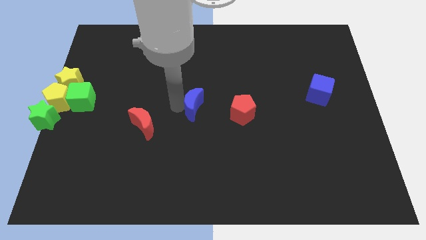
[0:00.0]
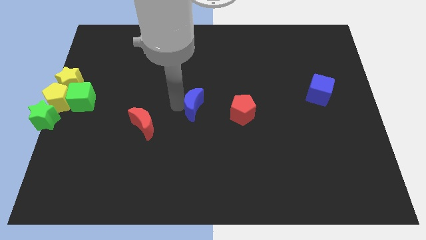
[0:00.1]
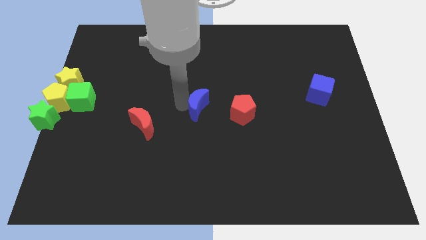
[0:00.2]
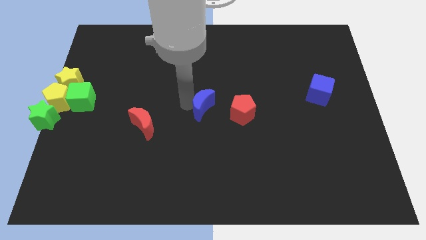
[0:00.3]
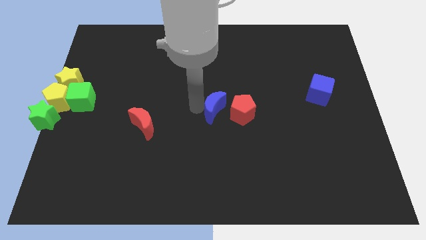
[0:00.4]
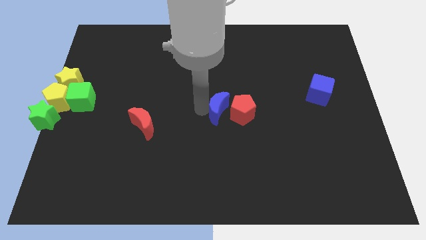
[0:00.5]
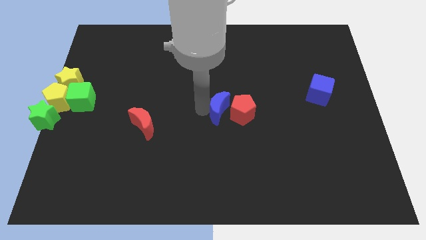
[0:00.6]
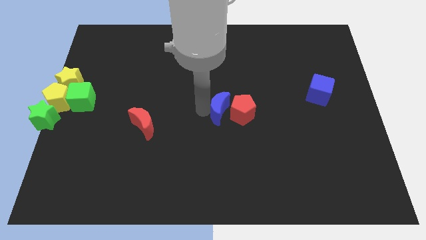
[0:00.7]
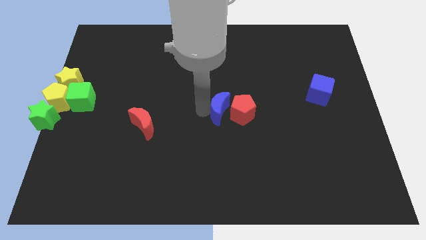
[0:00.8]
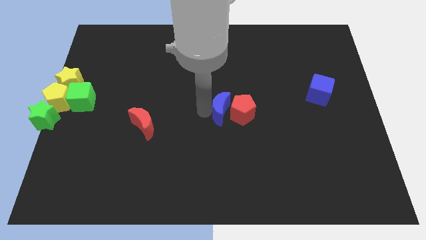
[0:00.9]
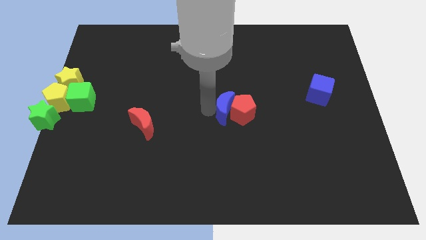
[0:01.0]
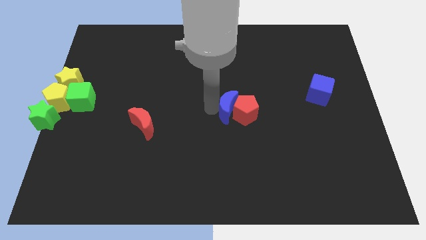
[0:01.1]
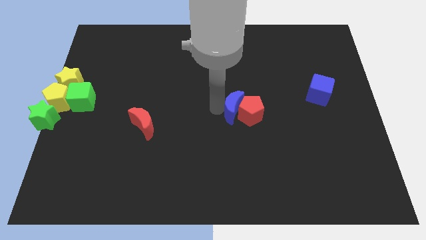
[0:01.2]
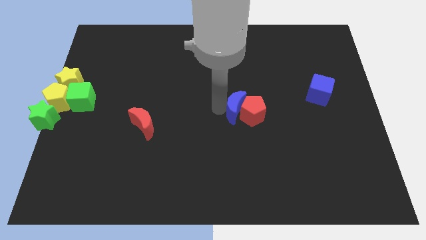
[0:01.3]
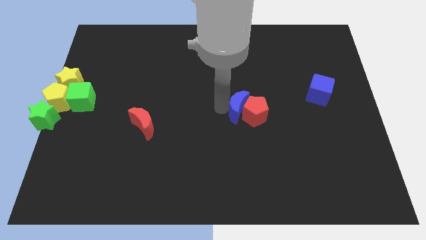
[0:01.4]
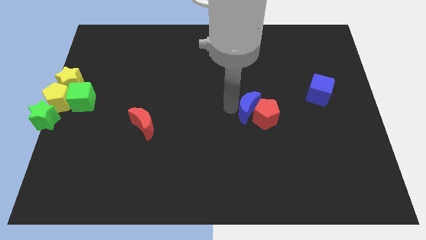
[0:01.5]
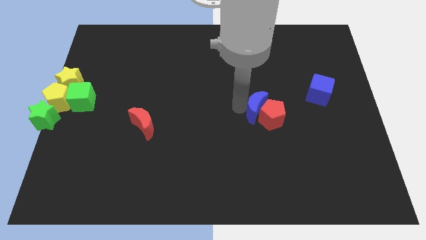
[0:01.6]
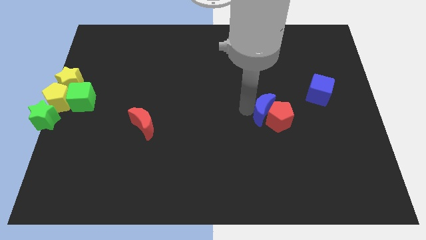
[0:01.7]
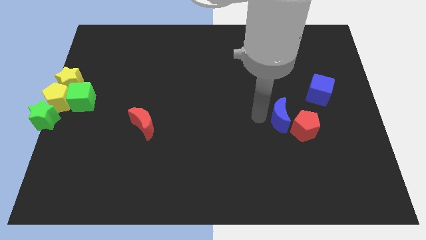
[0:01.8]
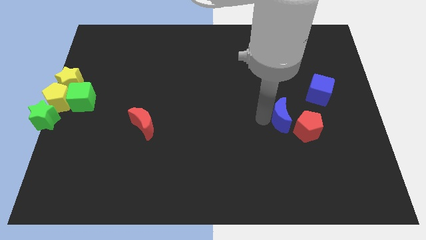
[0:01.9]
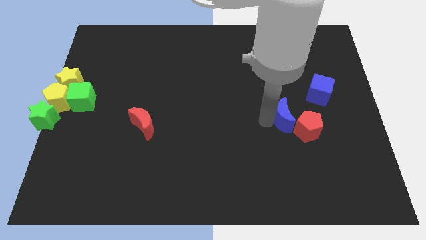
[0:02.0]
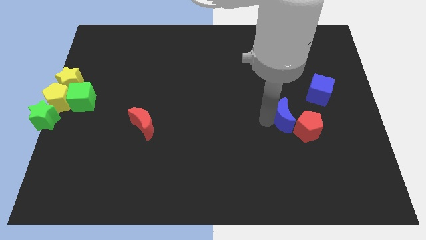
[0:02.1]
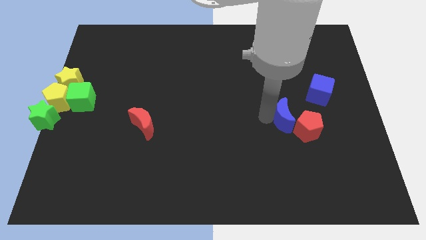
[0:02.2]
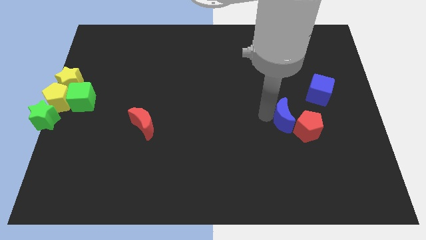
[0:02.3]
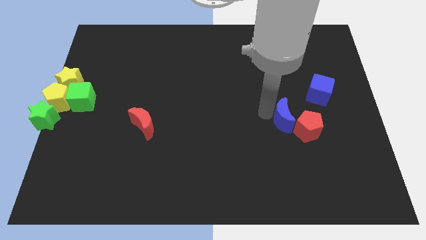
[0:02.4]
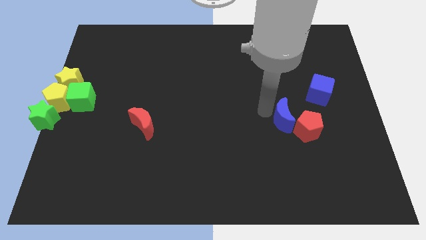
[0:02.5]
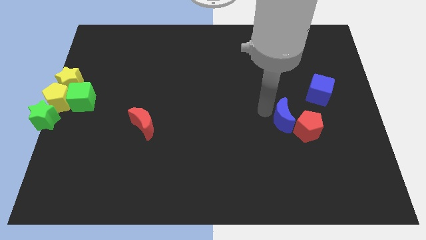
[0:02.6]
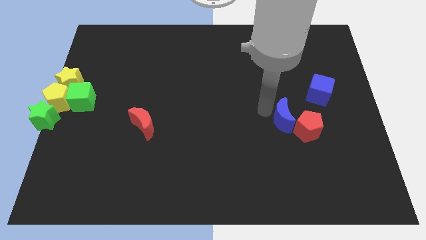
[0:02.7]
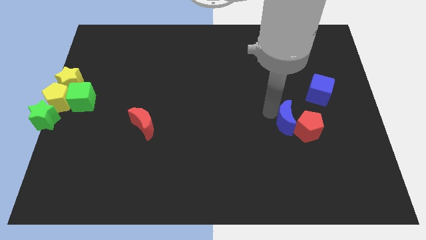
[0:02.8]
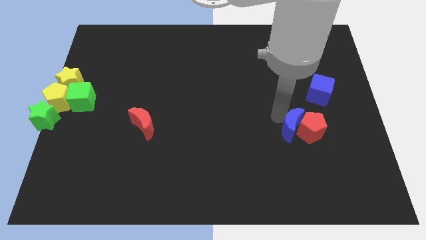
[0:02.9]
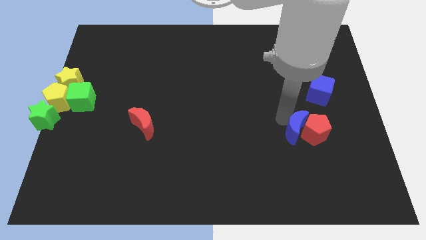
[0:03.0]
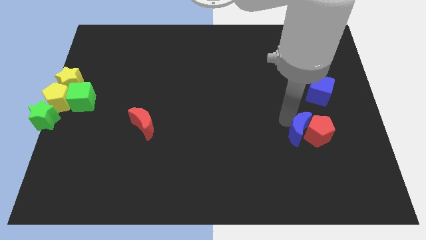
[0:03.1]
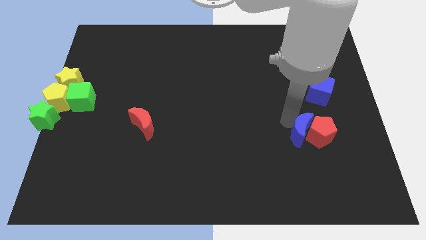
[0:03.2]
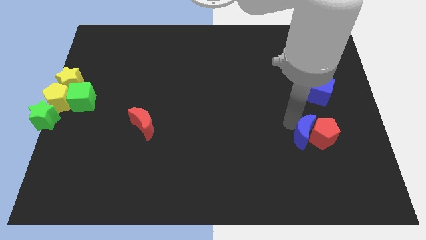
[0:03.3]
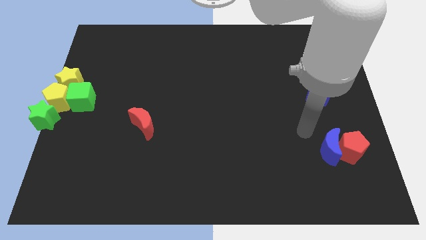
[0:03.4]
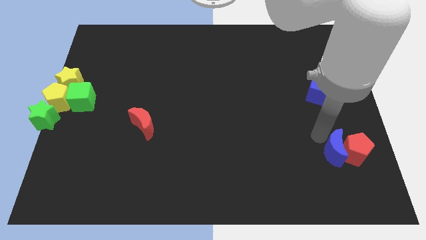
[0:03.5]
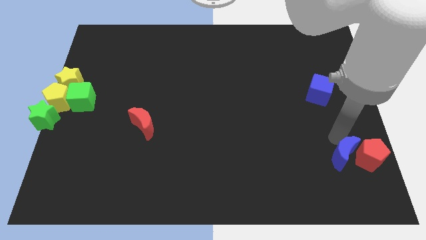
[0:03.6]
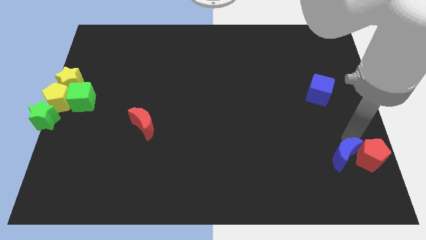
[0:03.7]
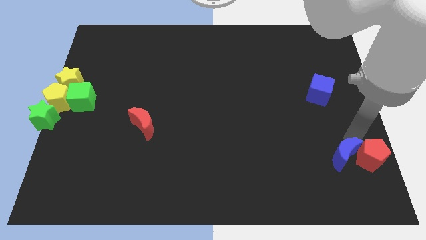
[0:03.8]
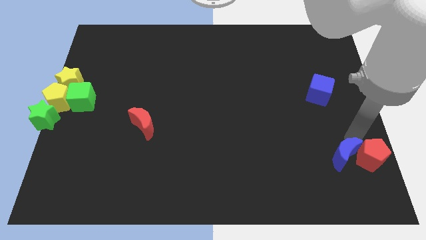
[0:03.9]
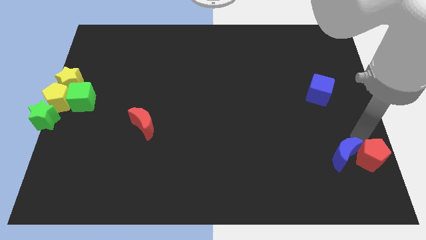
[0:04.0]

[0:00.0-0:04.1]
place the blue crescent and red pentagon below the blue cube

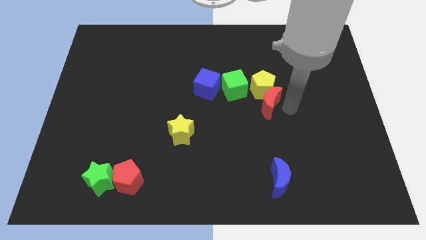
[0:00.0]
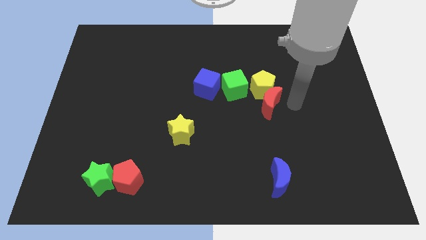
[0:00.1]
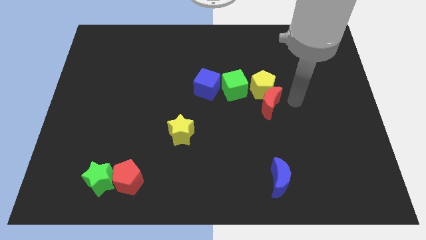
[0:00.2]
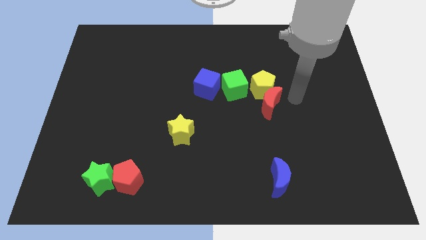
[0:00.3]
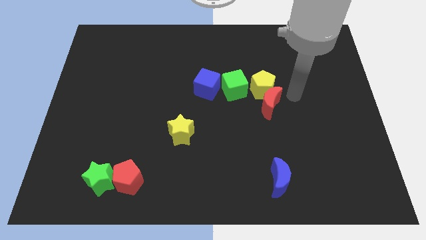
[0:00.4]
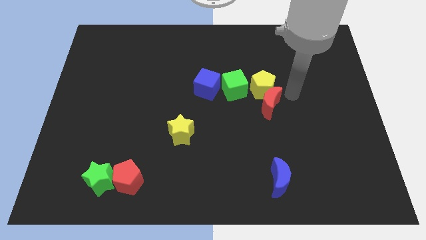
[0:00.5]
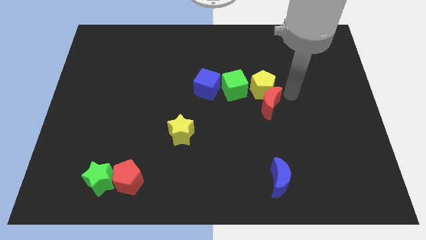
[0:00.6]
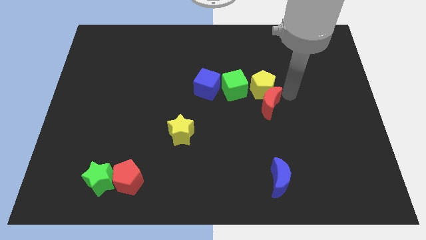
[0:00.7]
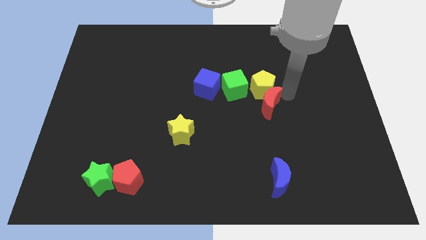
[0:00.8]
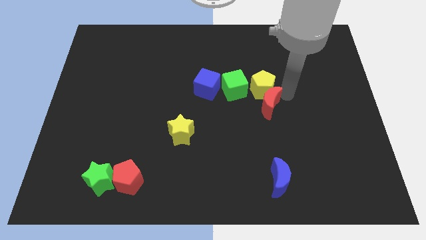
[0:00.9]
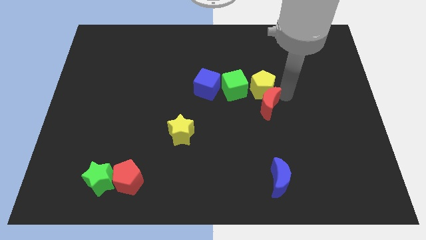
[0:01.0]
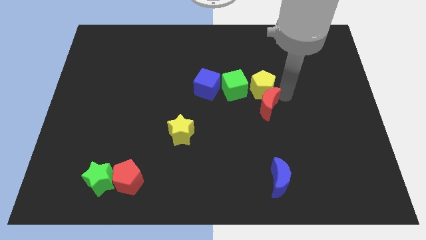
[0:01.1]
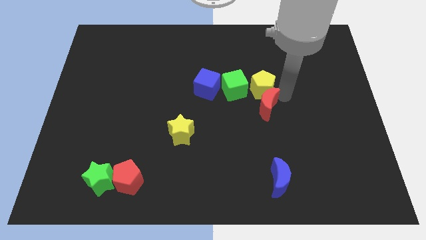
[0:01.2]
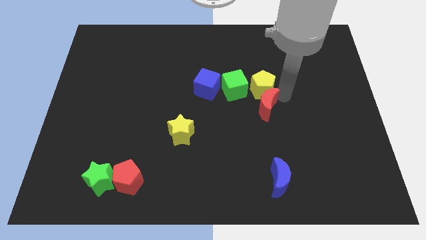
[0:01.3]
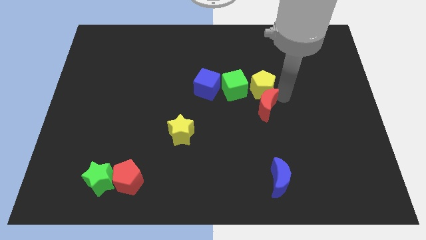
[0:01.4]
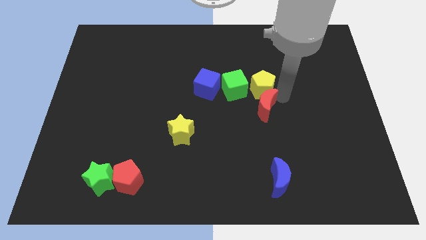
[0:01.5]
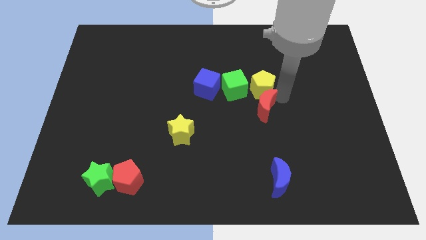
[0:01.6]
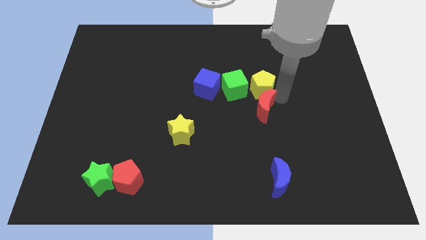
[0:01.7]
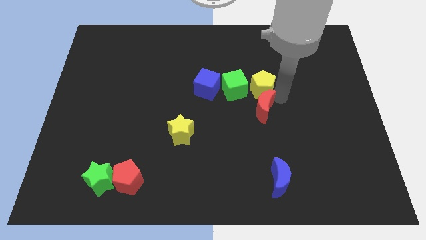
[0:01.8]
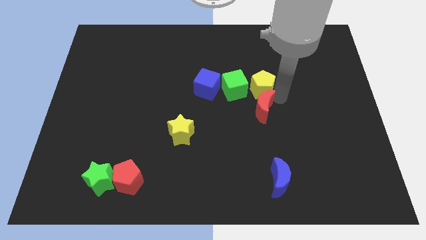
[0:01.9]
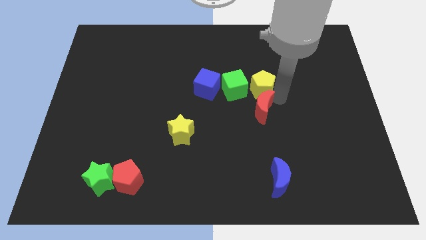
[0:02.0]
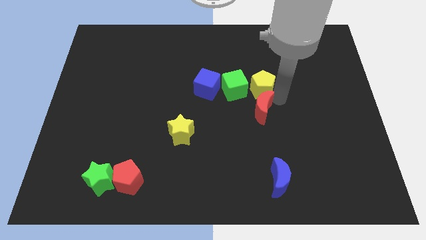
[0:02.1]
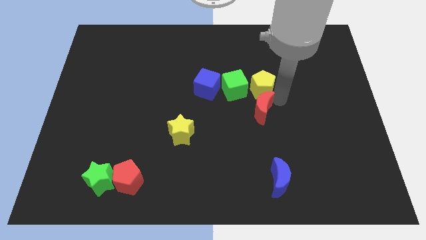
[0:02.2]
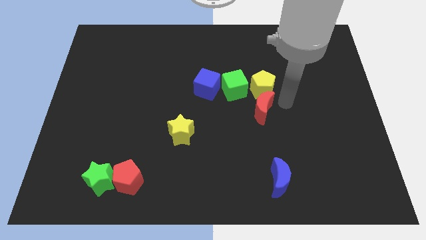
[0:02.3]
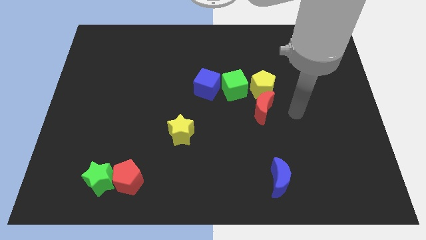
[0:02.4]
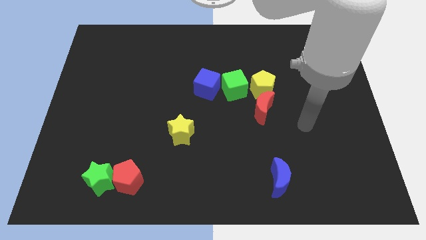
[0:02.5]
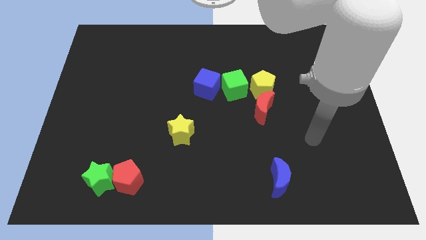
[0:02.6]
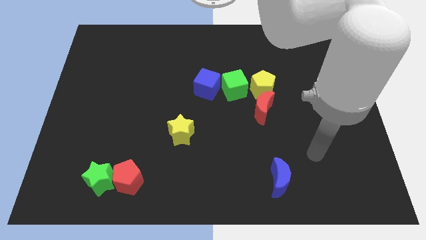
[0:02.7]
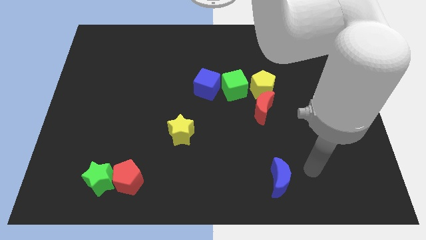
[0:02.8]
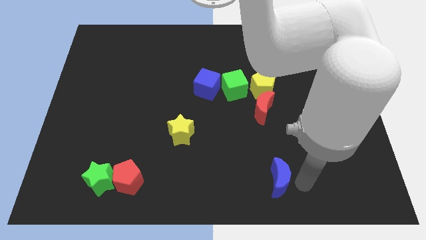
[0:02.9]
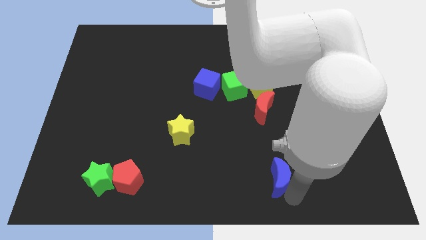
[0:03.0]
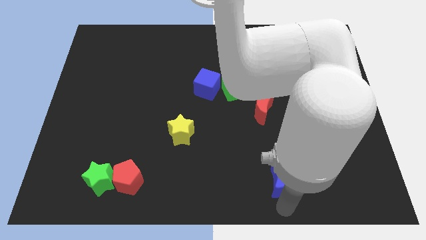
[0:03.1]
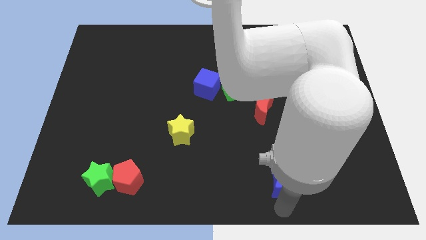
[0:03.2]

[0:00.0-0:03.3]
place the red moon below the yellow pentagon

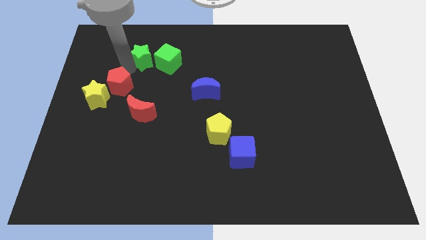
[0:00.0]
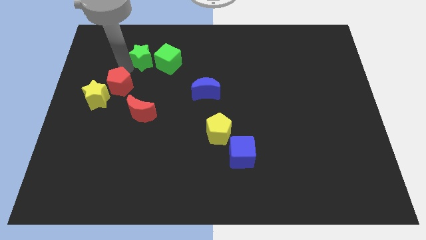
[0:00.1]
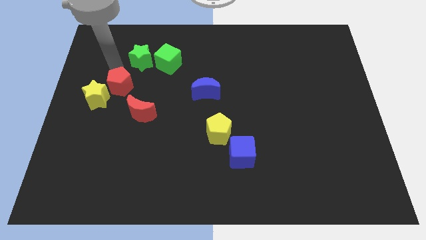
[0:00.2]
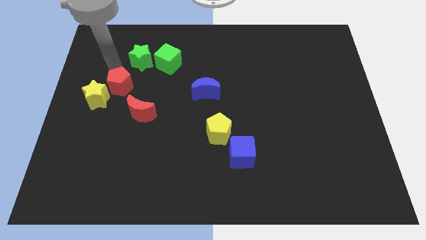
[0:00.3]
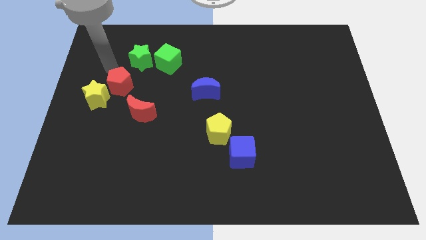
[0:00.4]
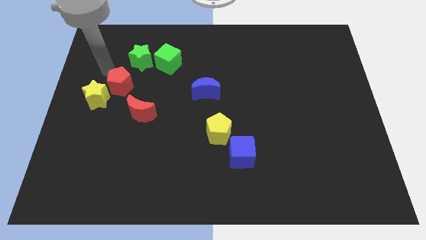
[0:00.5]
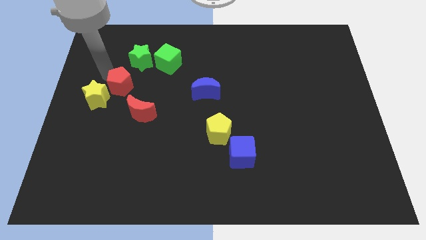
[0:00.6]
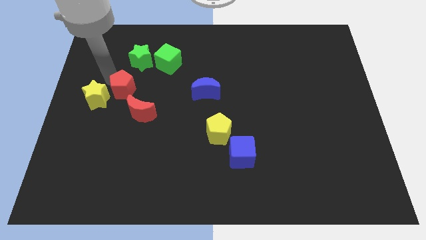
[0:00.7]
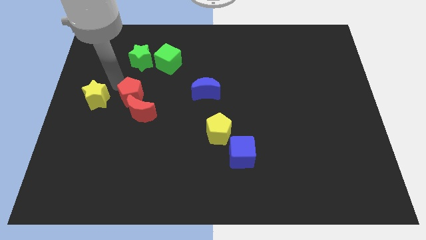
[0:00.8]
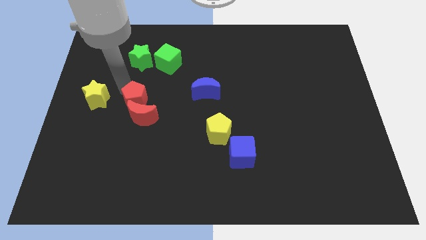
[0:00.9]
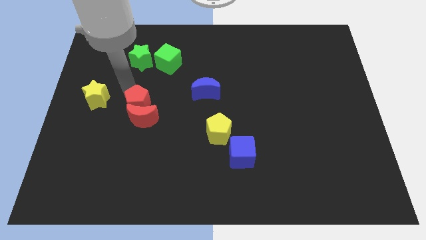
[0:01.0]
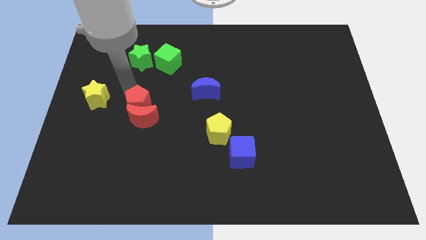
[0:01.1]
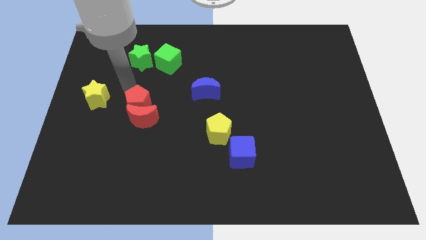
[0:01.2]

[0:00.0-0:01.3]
push the red pentagon to the top of the red crescent

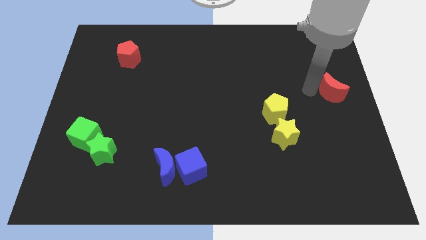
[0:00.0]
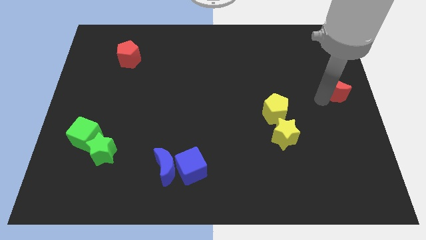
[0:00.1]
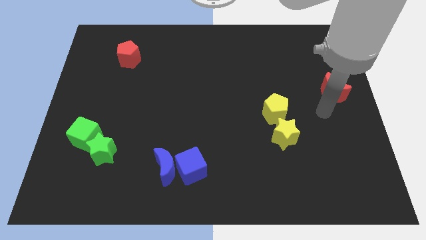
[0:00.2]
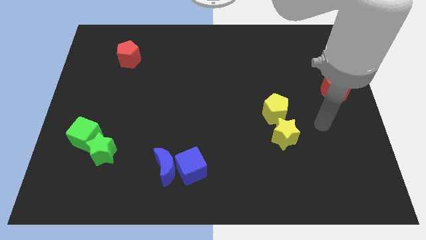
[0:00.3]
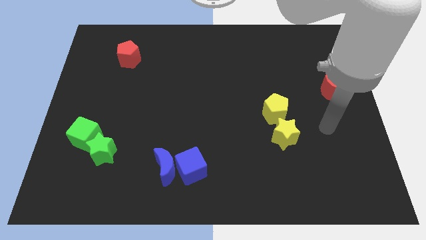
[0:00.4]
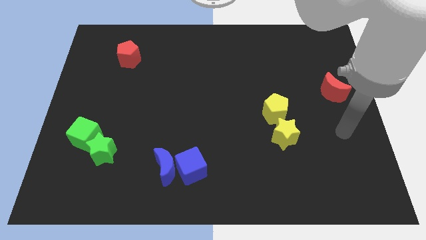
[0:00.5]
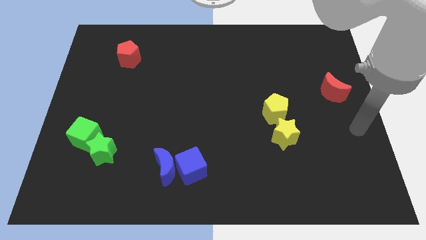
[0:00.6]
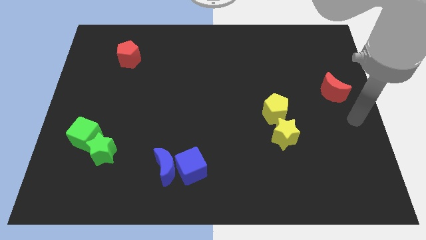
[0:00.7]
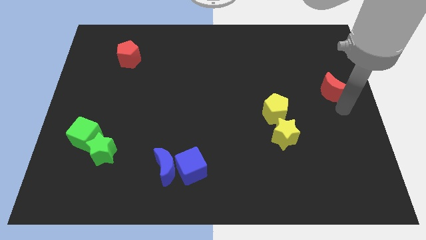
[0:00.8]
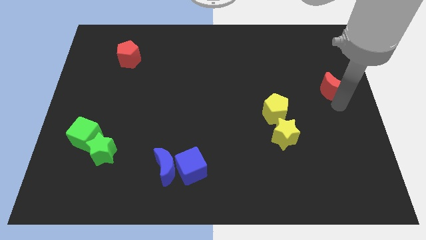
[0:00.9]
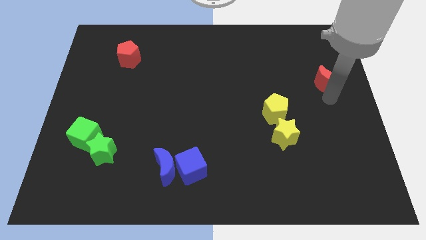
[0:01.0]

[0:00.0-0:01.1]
tap the bottom side of red moon
